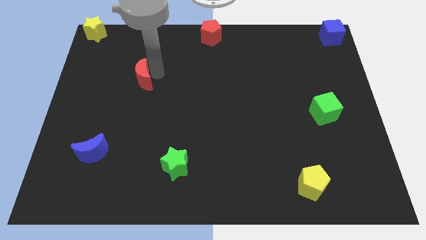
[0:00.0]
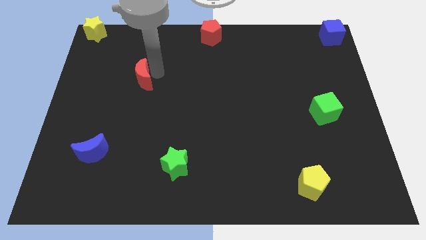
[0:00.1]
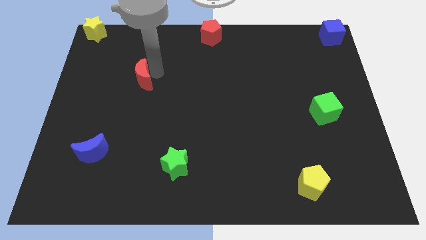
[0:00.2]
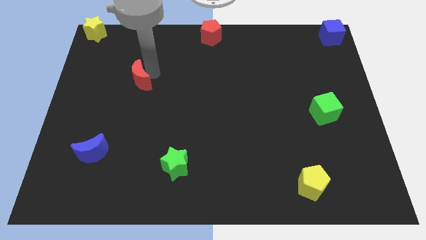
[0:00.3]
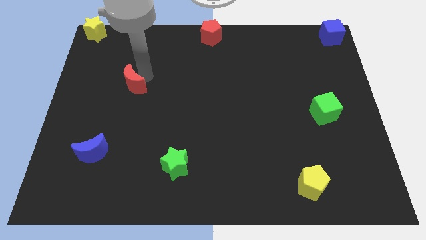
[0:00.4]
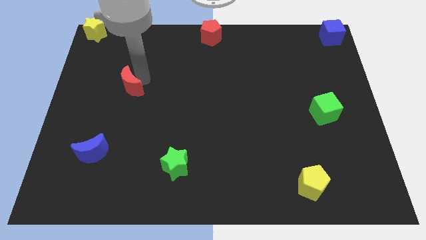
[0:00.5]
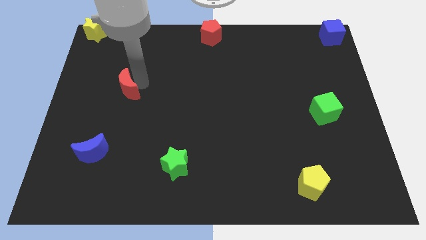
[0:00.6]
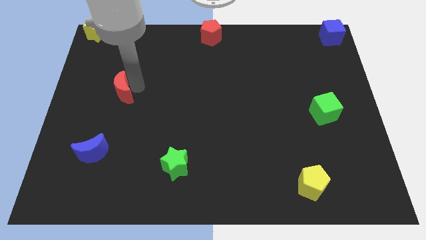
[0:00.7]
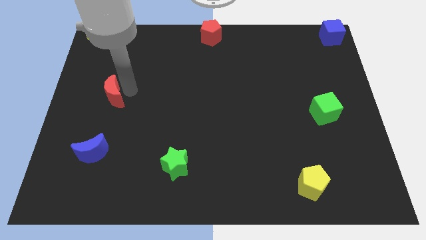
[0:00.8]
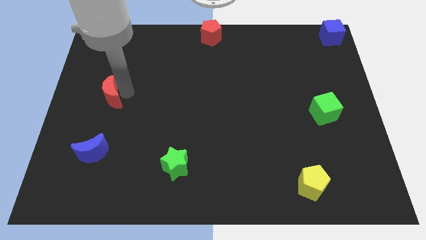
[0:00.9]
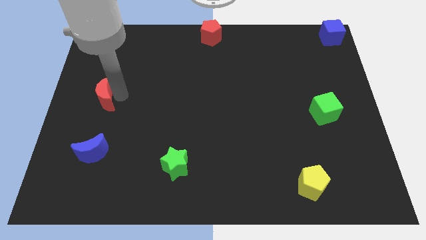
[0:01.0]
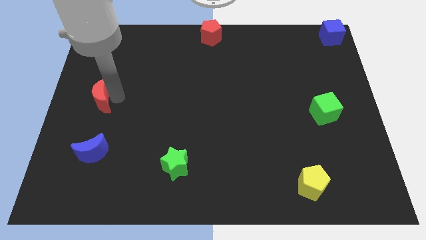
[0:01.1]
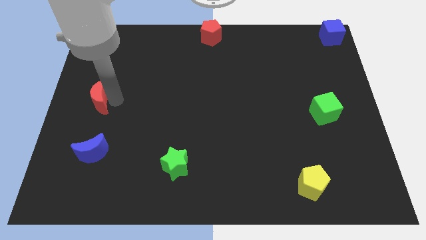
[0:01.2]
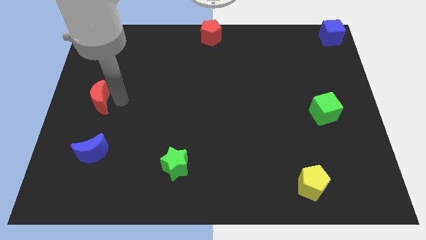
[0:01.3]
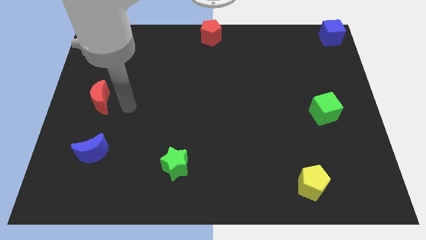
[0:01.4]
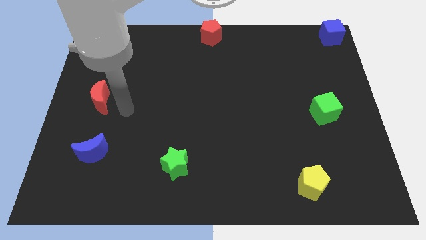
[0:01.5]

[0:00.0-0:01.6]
push the red moon vertically above the blue moon

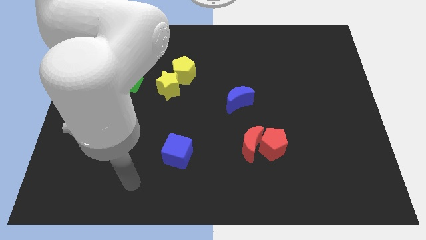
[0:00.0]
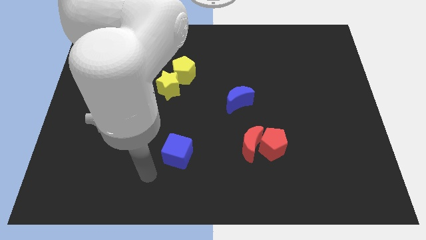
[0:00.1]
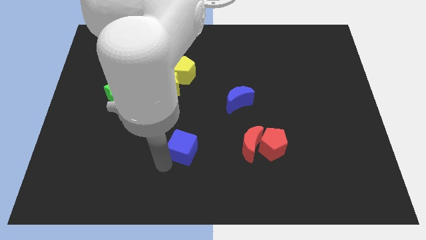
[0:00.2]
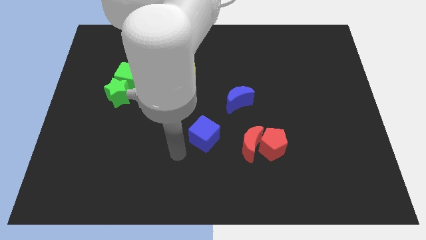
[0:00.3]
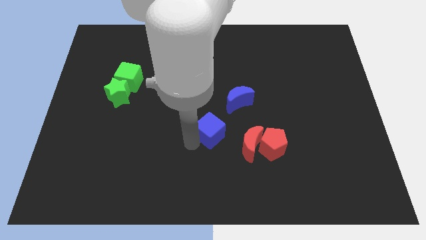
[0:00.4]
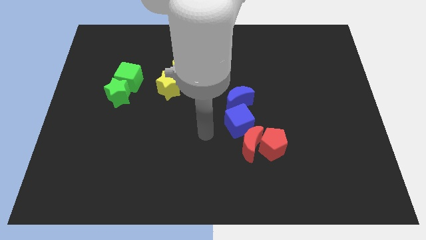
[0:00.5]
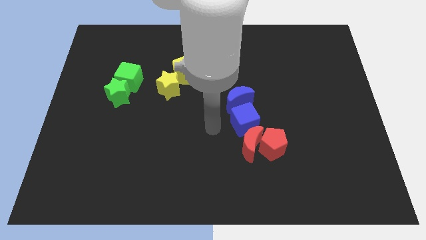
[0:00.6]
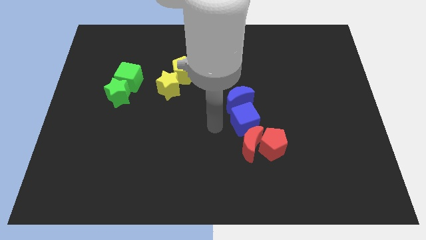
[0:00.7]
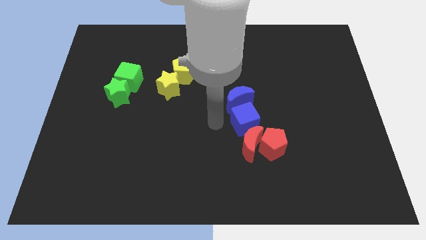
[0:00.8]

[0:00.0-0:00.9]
place the blue cube in between blue crescent and red crescent

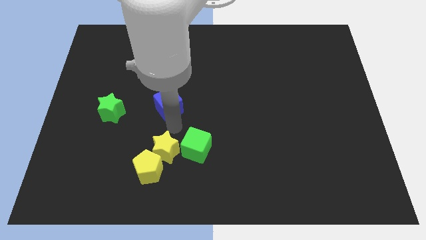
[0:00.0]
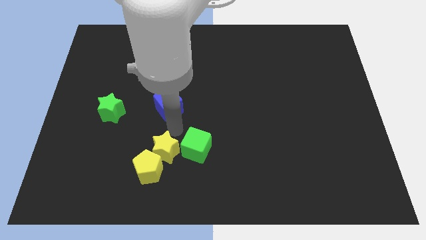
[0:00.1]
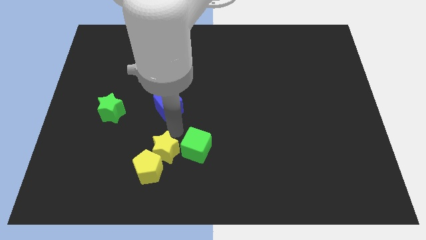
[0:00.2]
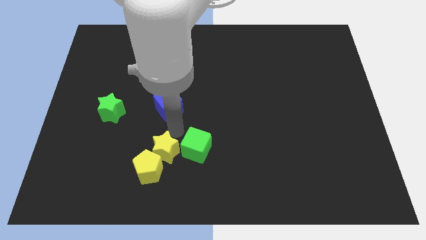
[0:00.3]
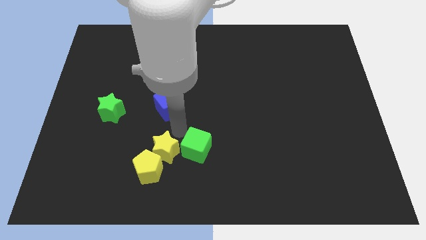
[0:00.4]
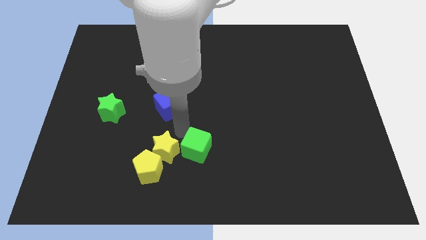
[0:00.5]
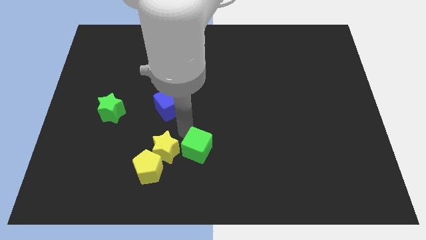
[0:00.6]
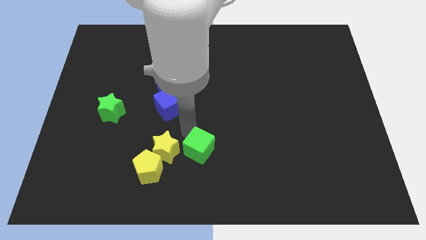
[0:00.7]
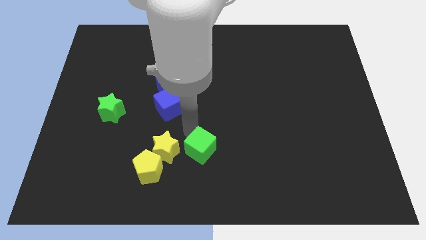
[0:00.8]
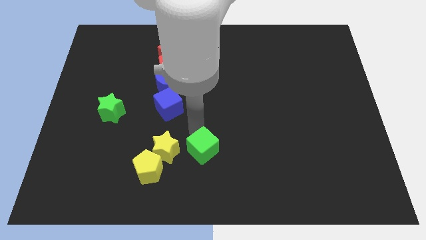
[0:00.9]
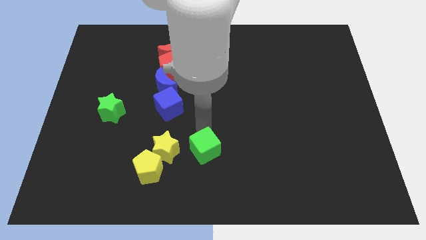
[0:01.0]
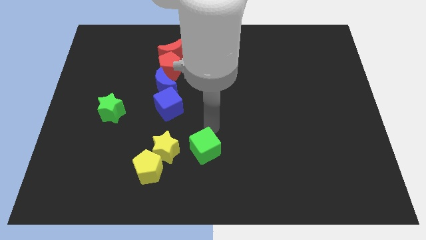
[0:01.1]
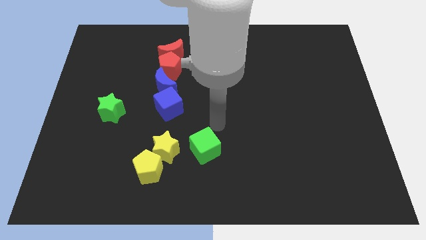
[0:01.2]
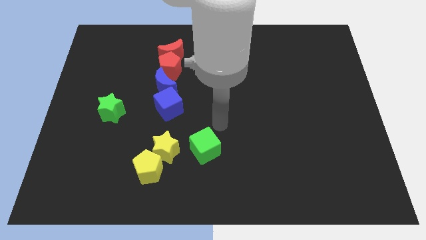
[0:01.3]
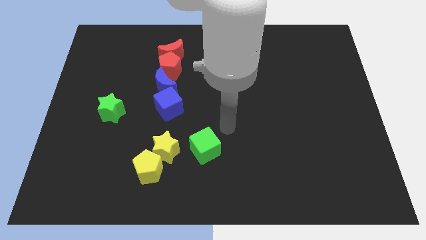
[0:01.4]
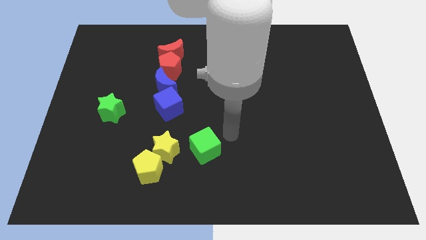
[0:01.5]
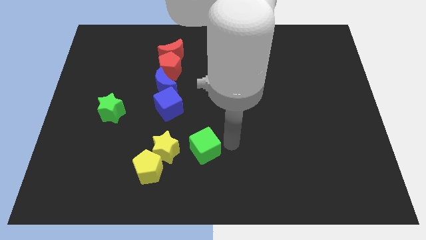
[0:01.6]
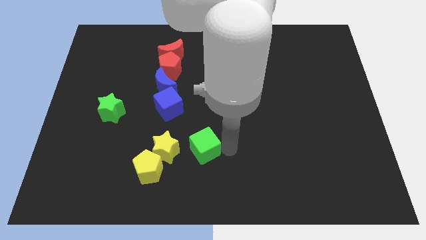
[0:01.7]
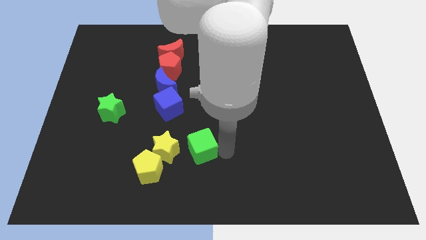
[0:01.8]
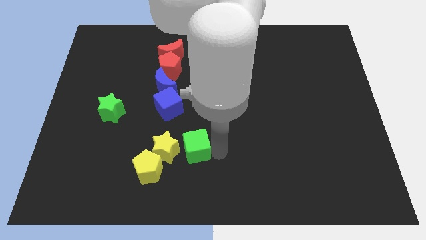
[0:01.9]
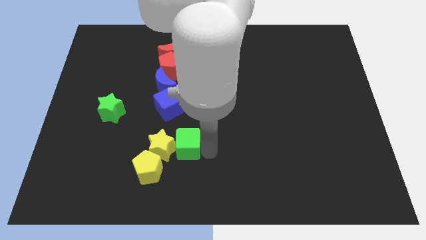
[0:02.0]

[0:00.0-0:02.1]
place the green cube to the right of yellow star

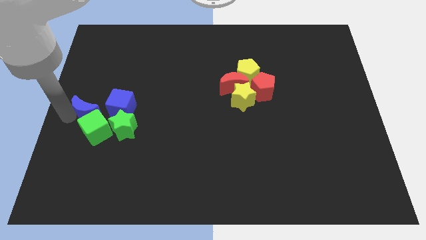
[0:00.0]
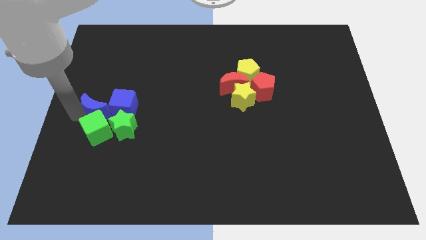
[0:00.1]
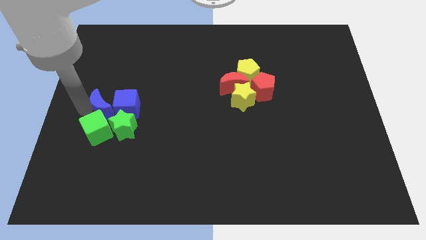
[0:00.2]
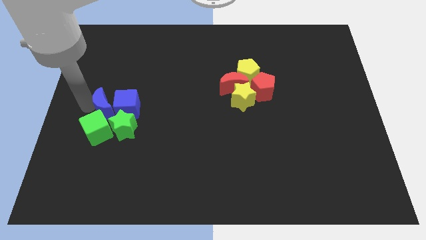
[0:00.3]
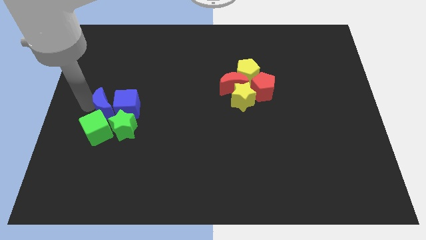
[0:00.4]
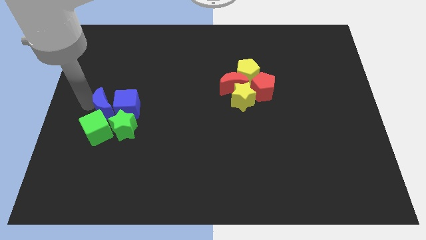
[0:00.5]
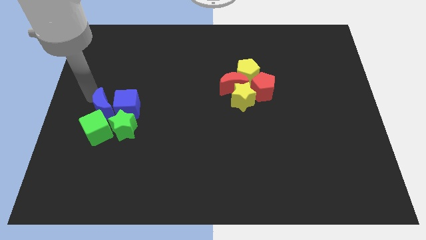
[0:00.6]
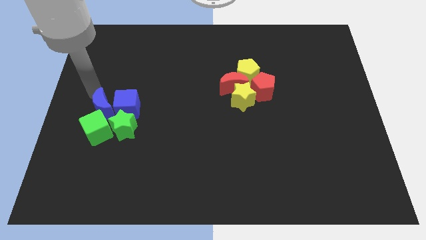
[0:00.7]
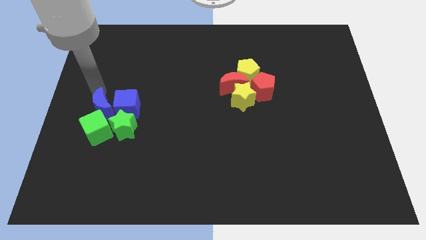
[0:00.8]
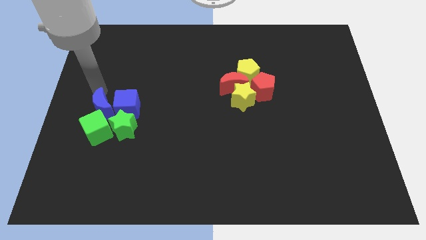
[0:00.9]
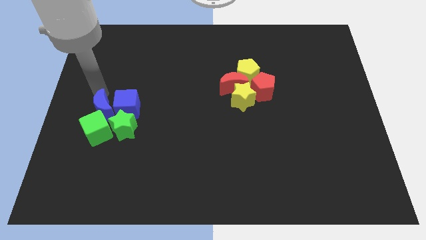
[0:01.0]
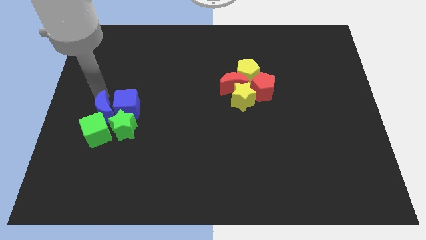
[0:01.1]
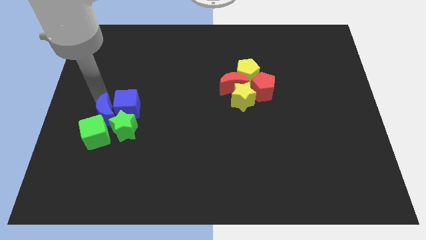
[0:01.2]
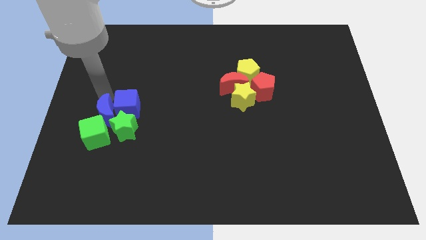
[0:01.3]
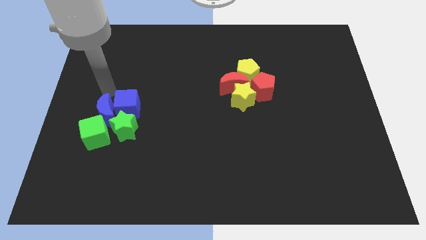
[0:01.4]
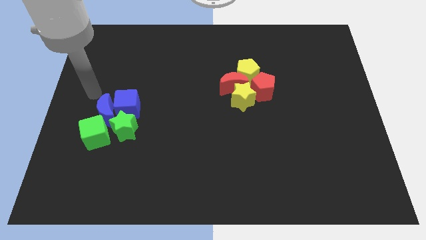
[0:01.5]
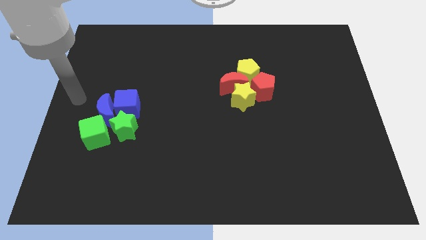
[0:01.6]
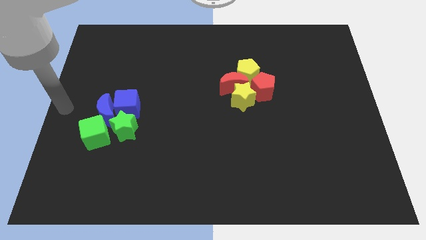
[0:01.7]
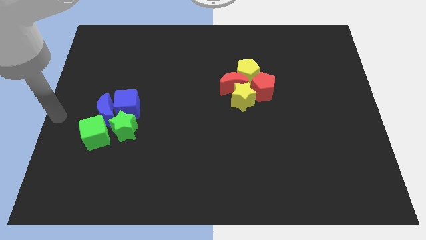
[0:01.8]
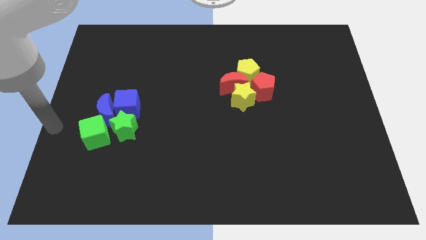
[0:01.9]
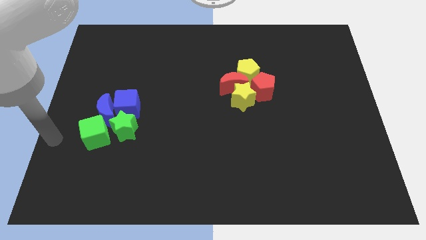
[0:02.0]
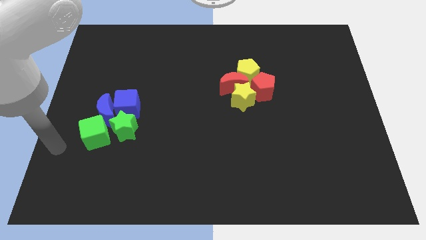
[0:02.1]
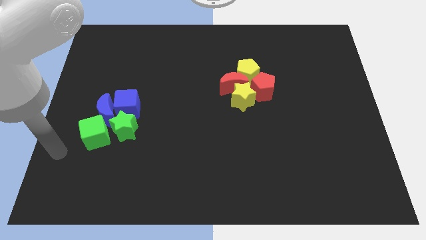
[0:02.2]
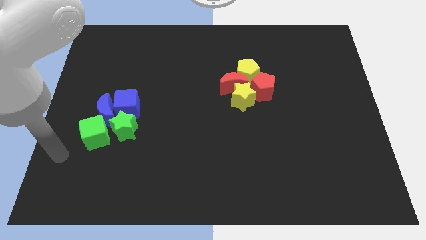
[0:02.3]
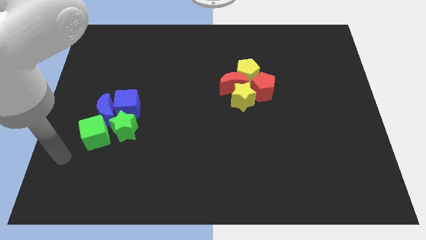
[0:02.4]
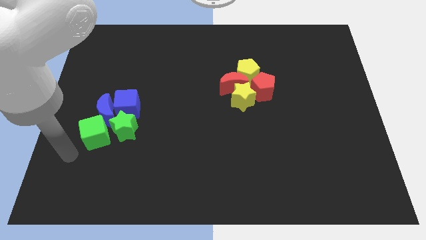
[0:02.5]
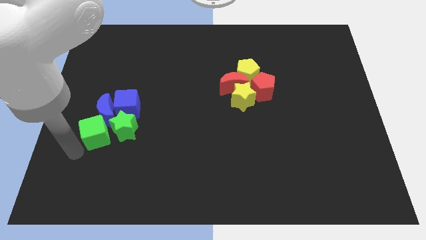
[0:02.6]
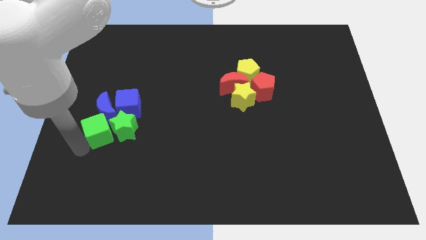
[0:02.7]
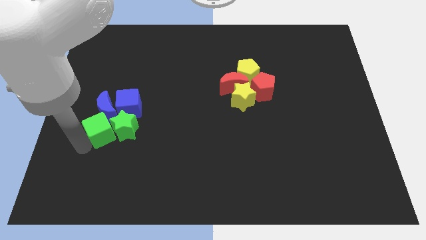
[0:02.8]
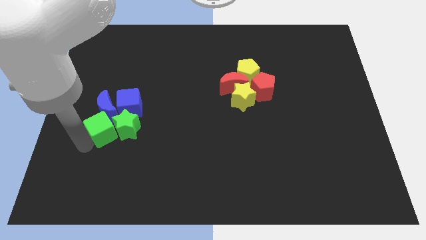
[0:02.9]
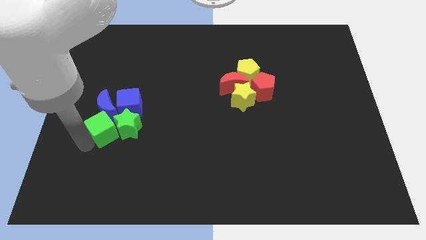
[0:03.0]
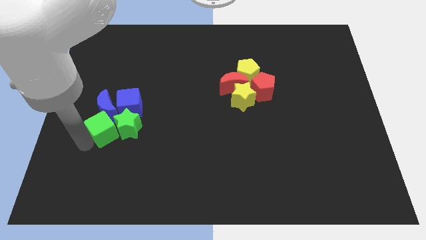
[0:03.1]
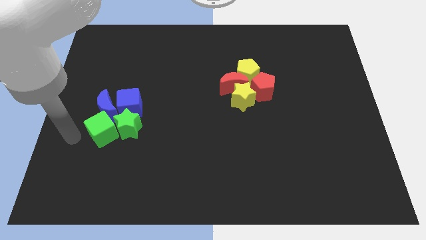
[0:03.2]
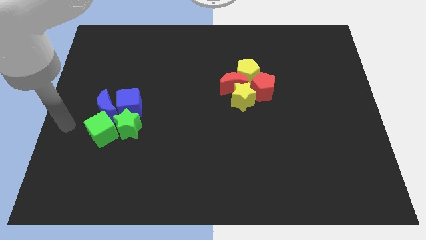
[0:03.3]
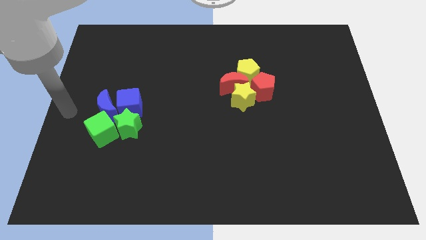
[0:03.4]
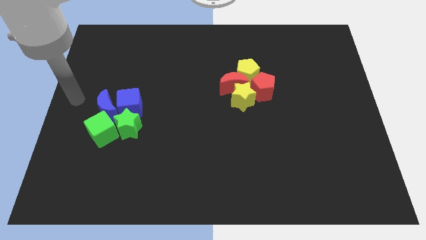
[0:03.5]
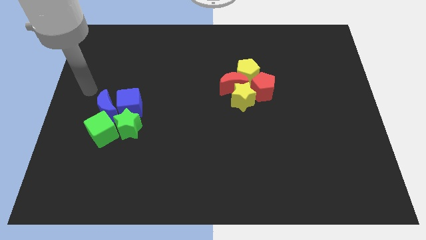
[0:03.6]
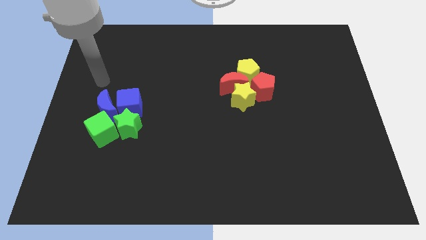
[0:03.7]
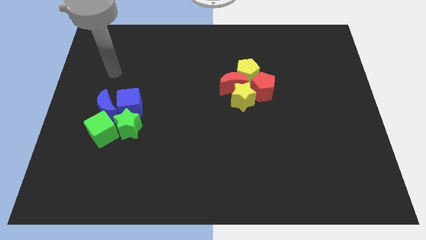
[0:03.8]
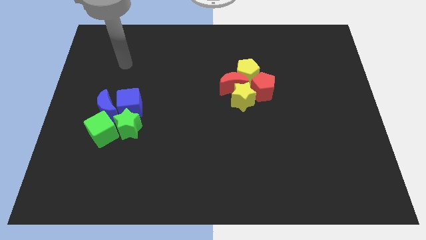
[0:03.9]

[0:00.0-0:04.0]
push the blue and green blocks together to form a group

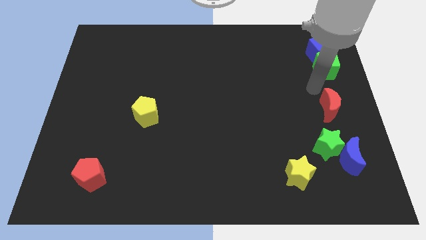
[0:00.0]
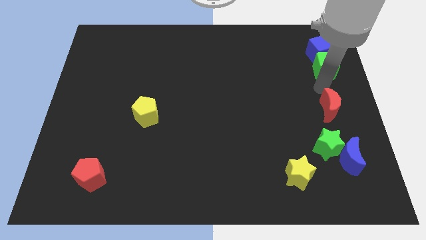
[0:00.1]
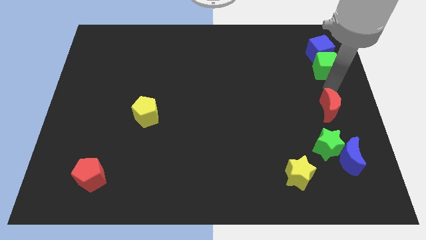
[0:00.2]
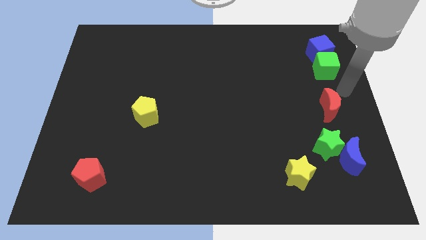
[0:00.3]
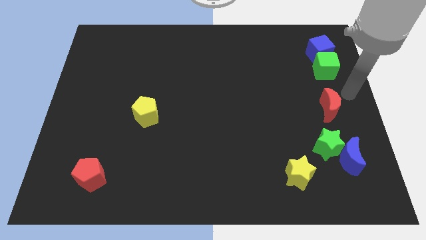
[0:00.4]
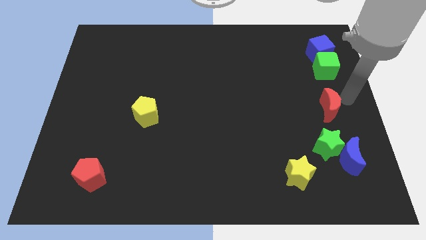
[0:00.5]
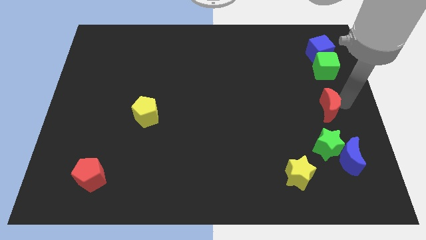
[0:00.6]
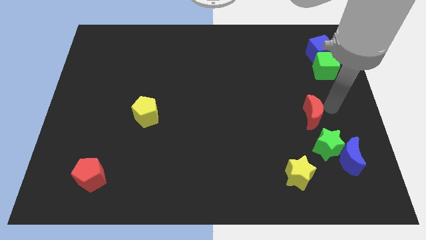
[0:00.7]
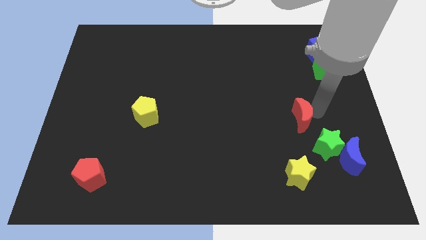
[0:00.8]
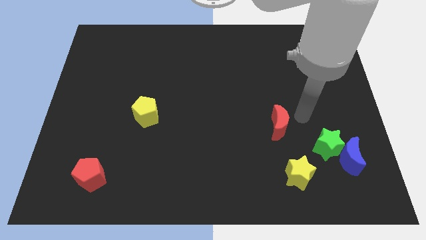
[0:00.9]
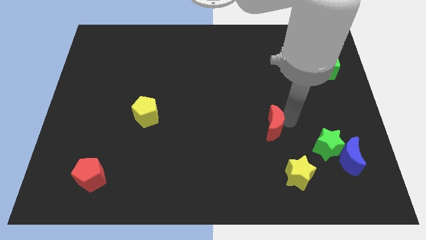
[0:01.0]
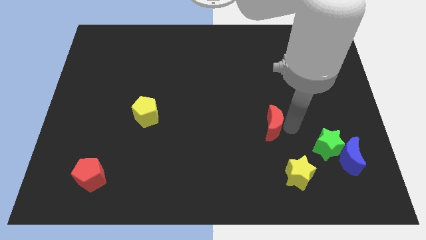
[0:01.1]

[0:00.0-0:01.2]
push slightly red crescent to the left
